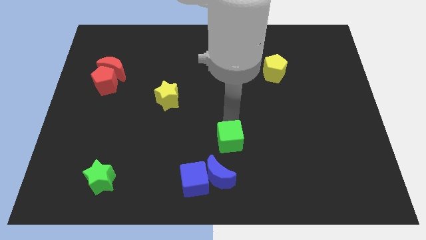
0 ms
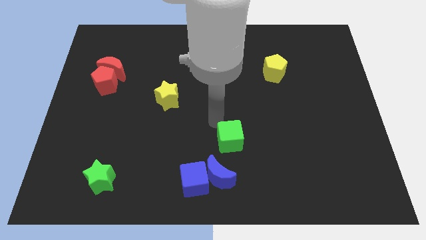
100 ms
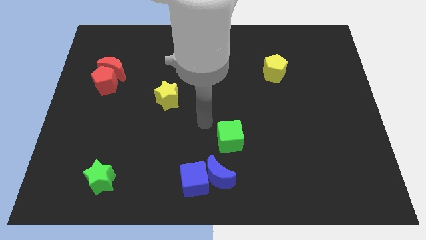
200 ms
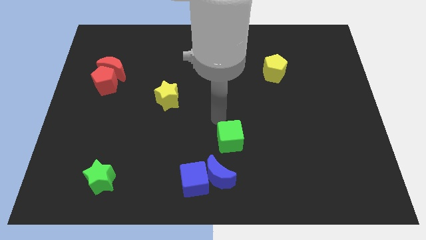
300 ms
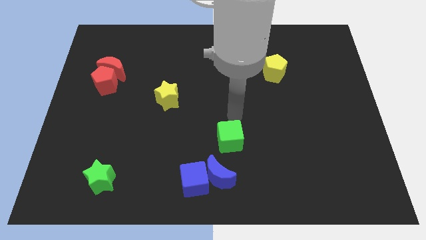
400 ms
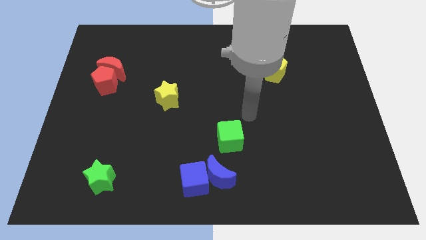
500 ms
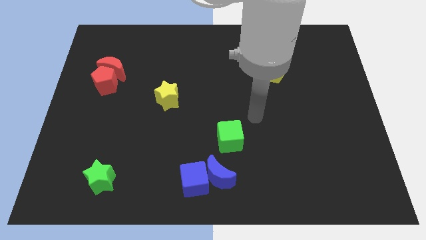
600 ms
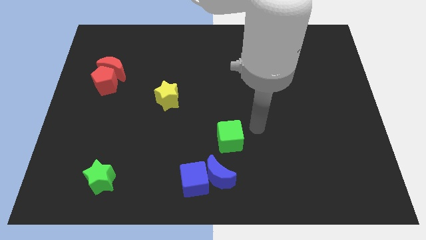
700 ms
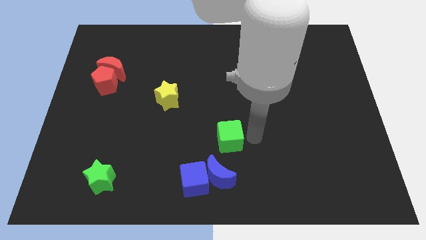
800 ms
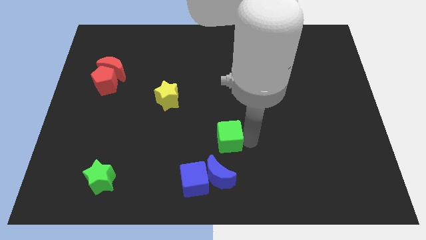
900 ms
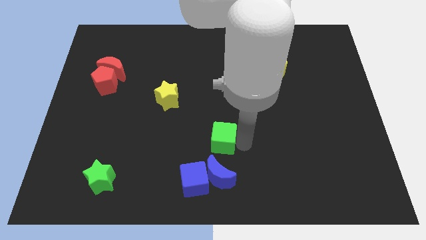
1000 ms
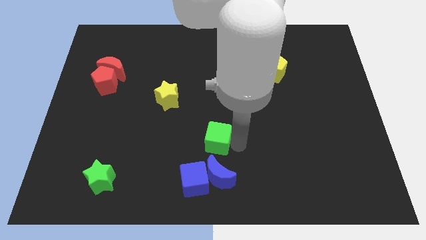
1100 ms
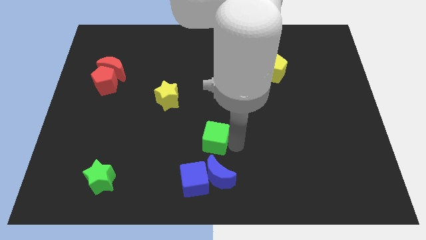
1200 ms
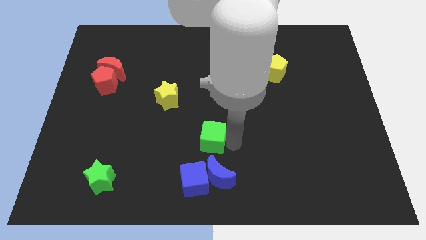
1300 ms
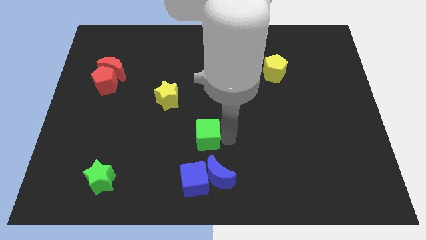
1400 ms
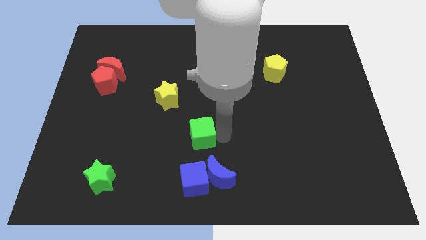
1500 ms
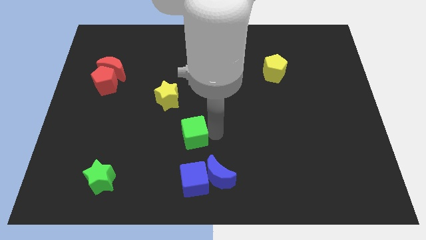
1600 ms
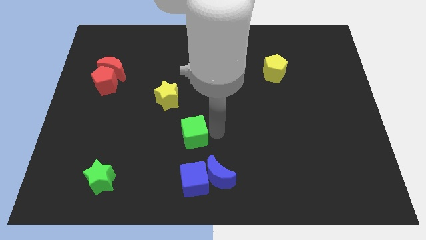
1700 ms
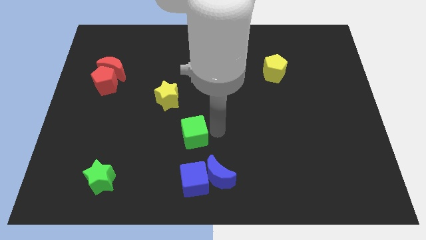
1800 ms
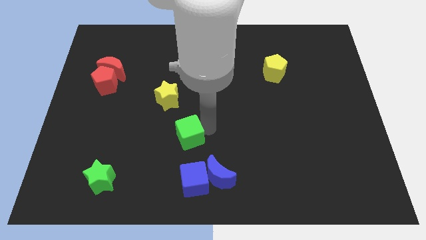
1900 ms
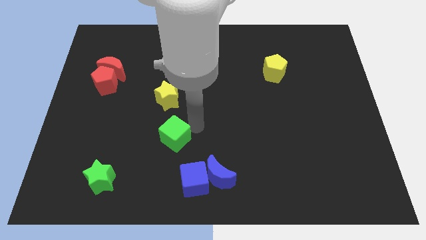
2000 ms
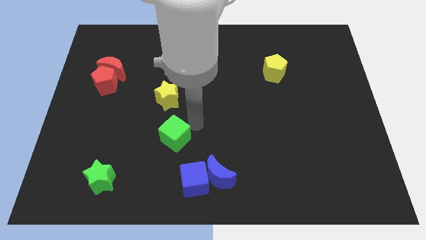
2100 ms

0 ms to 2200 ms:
drag the green cube to the top left of blue cube

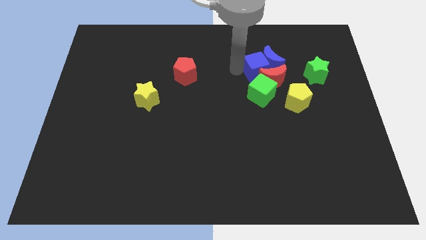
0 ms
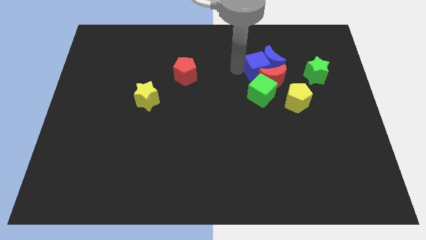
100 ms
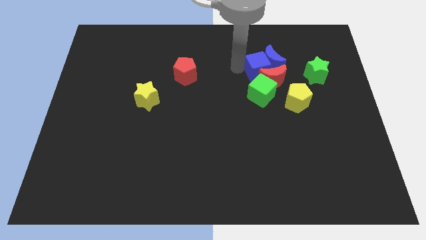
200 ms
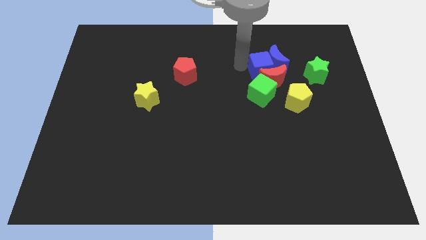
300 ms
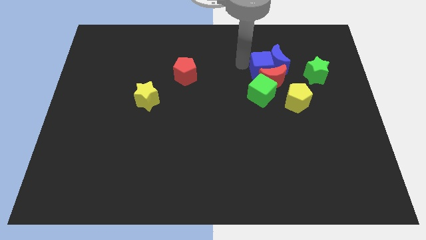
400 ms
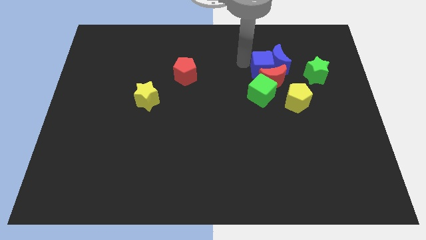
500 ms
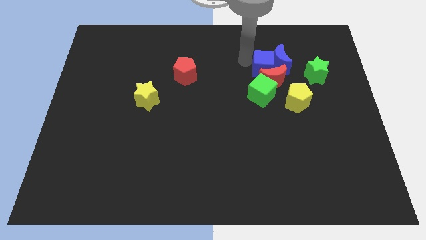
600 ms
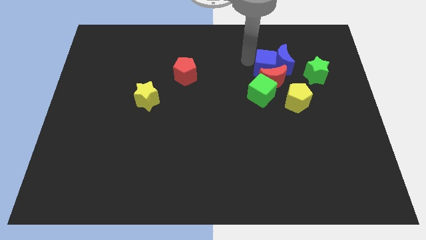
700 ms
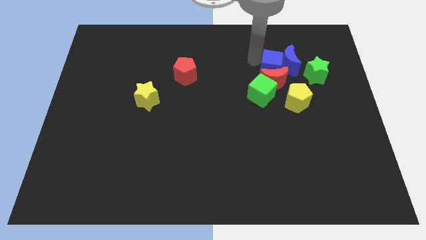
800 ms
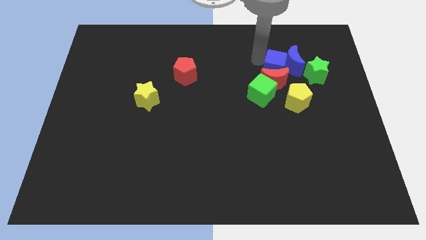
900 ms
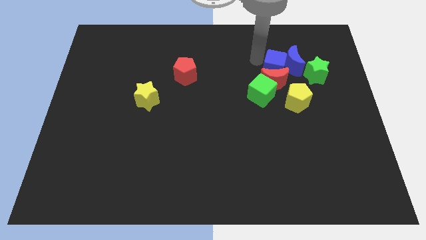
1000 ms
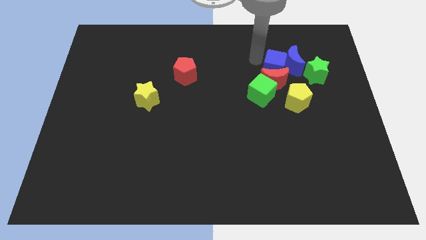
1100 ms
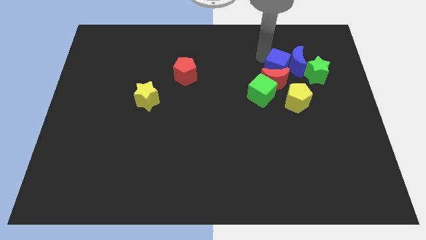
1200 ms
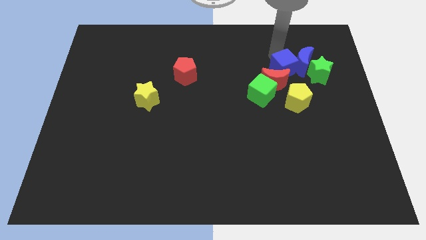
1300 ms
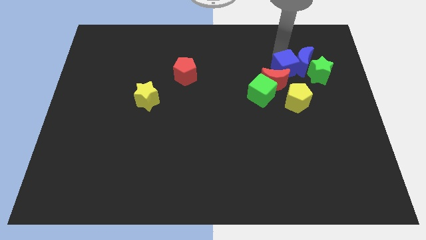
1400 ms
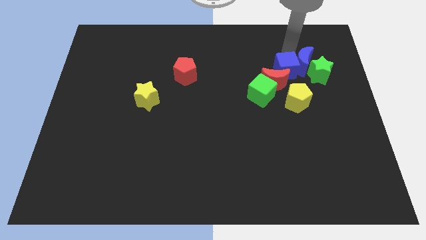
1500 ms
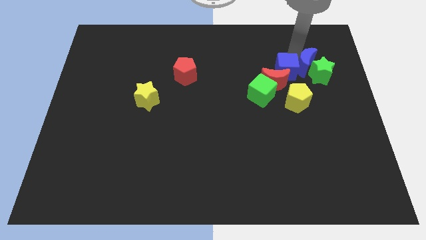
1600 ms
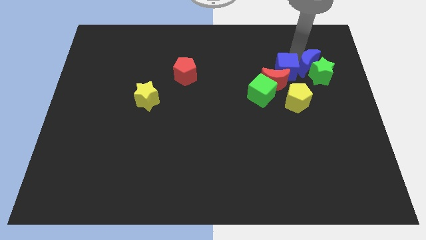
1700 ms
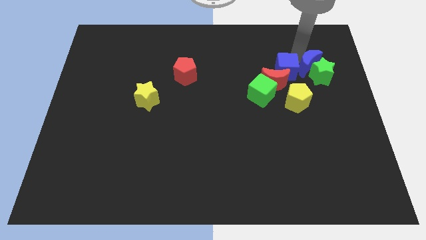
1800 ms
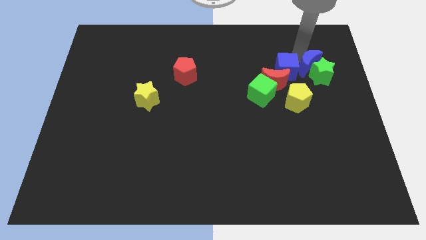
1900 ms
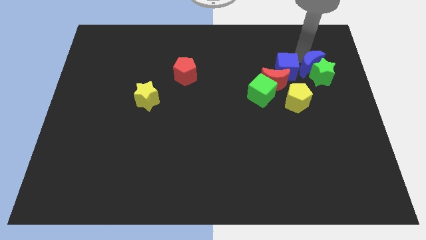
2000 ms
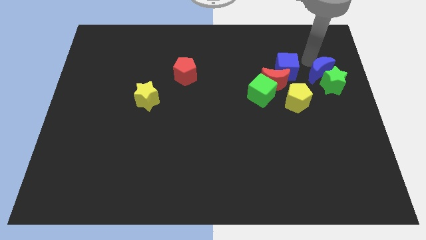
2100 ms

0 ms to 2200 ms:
slide the blue moon into the green star

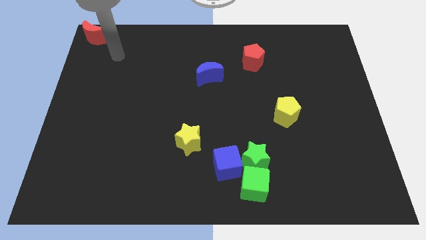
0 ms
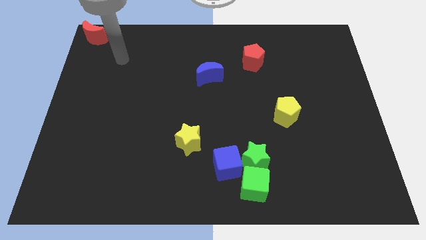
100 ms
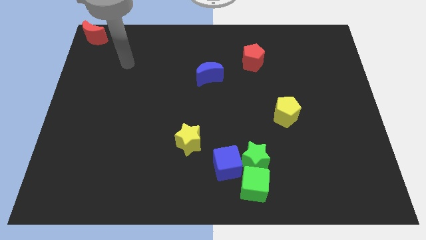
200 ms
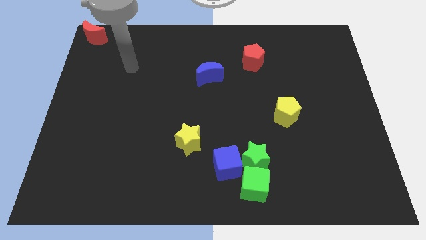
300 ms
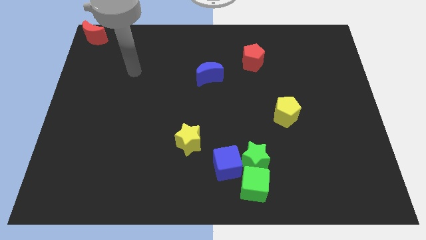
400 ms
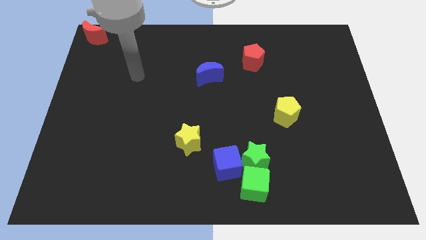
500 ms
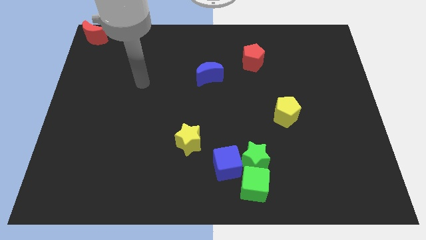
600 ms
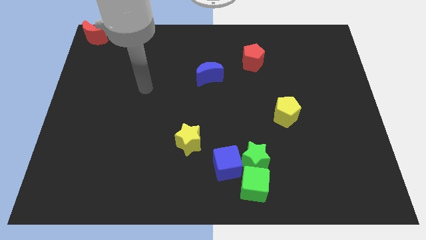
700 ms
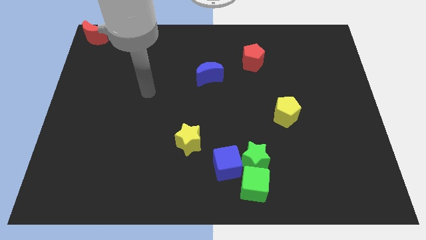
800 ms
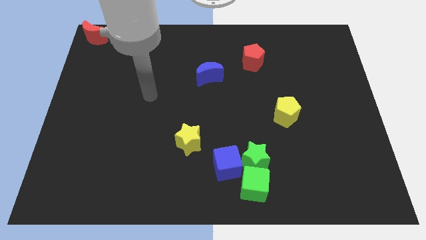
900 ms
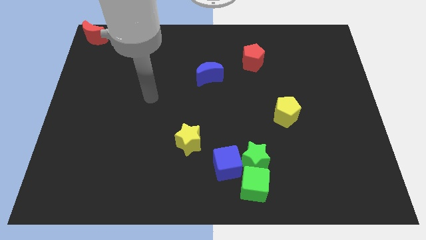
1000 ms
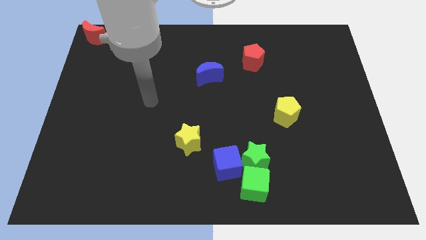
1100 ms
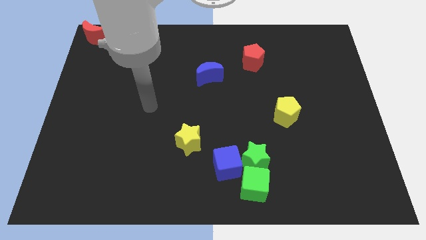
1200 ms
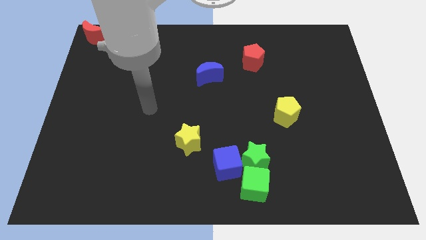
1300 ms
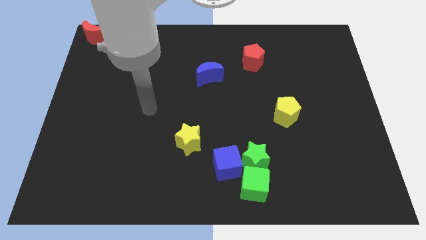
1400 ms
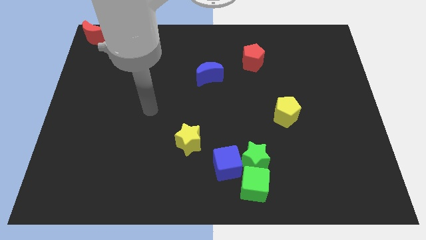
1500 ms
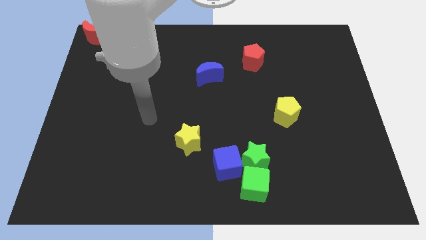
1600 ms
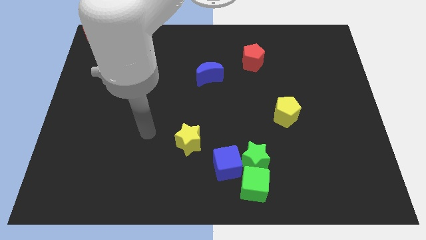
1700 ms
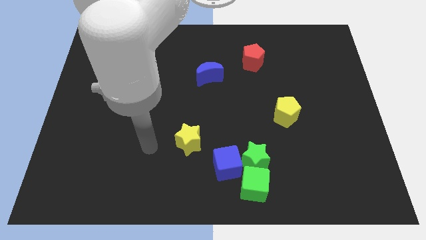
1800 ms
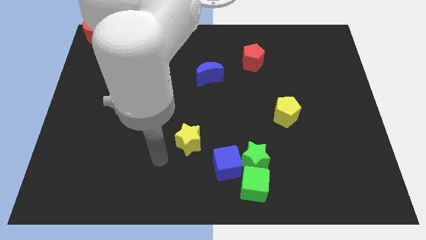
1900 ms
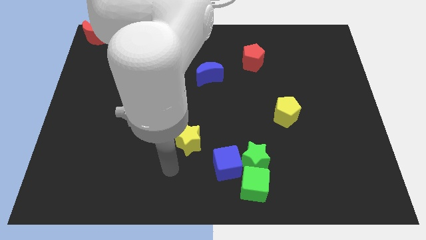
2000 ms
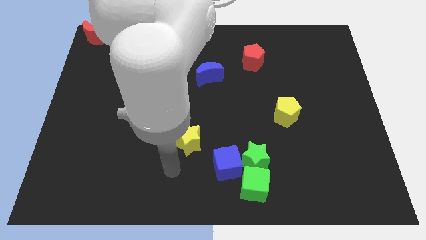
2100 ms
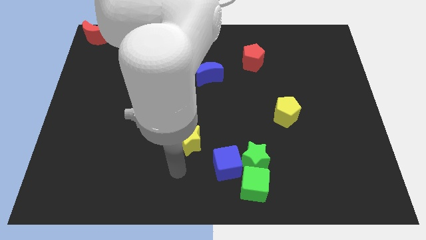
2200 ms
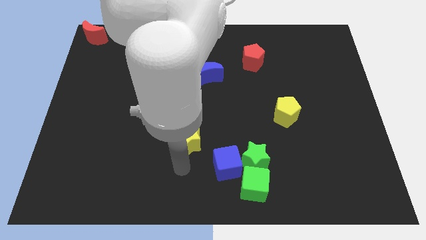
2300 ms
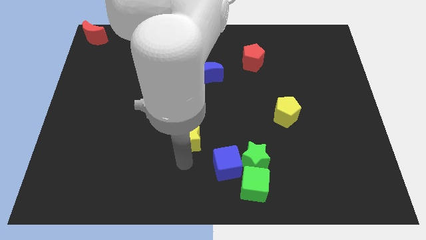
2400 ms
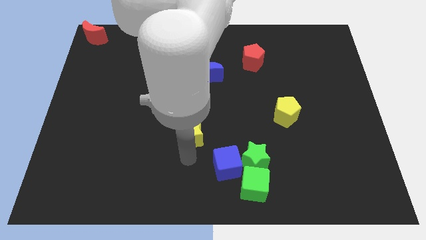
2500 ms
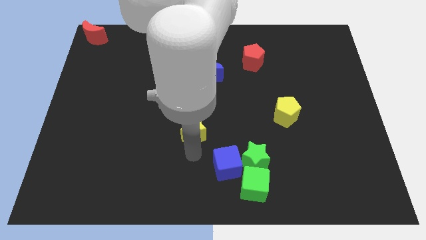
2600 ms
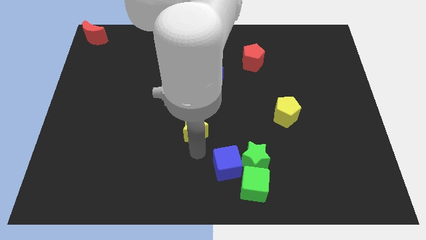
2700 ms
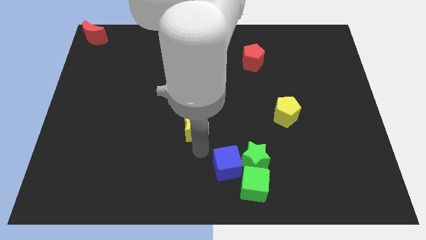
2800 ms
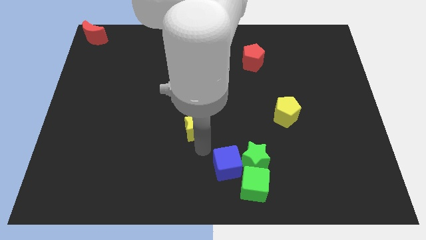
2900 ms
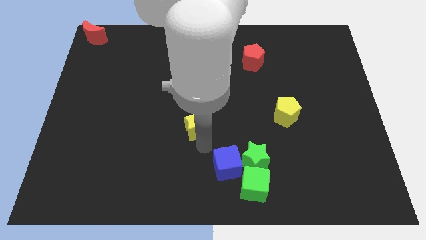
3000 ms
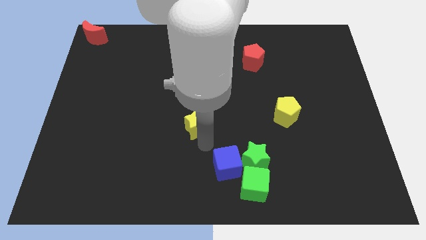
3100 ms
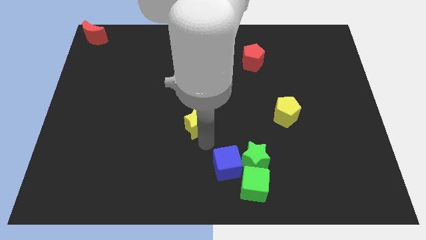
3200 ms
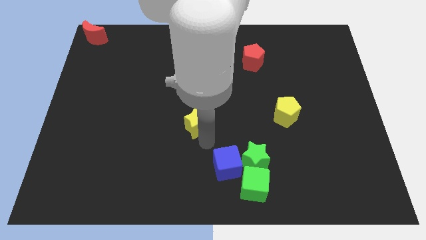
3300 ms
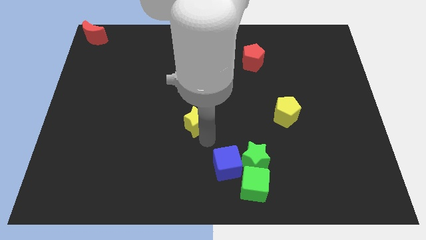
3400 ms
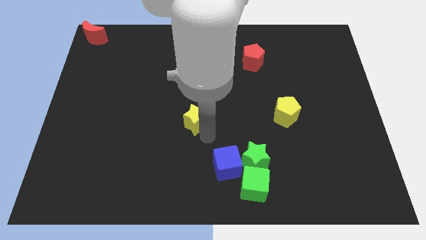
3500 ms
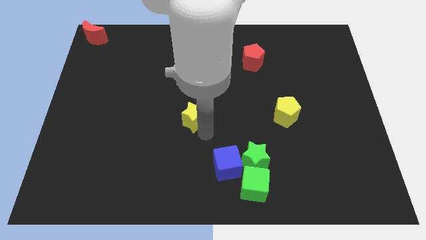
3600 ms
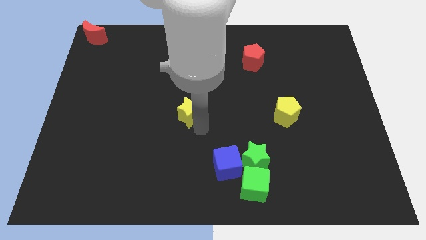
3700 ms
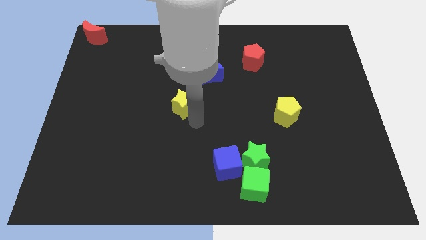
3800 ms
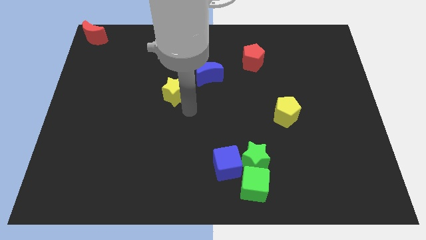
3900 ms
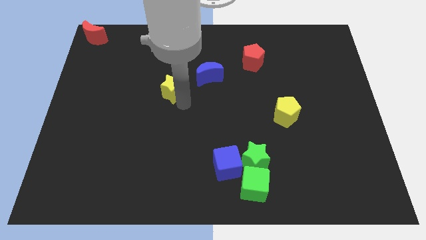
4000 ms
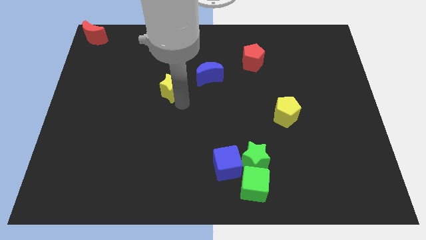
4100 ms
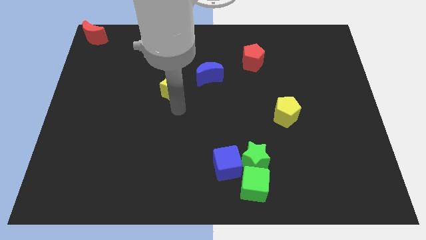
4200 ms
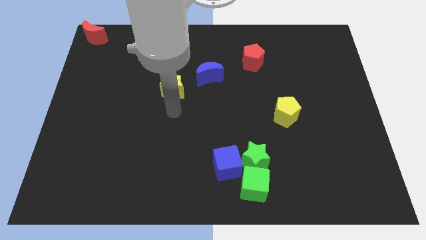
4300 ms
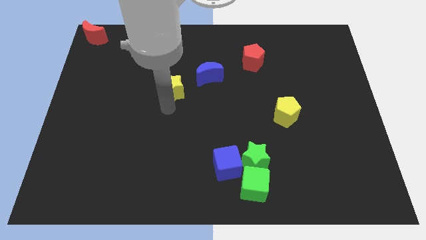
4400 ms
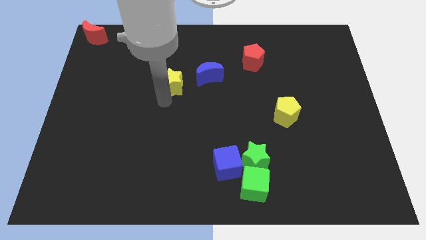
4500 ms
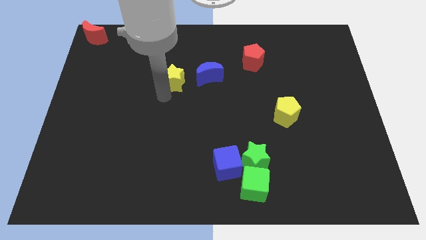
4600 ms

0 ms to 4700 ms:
place the yellow star left to the blue moon
